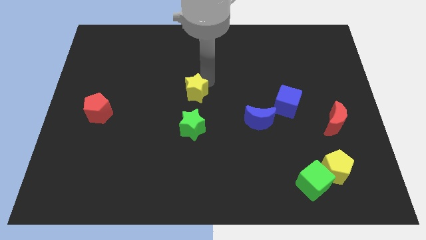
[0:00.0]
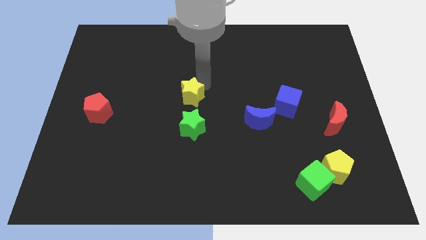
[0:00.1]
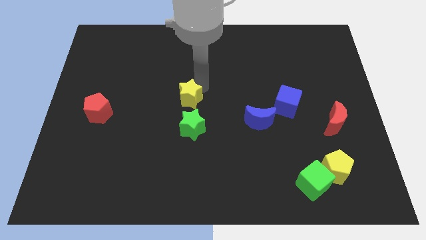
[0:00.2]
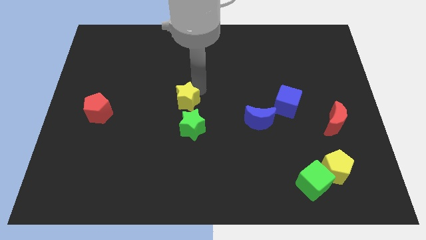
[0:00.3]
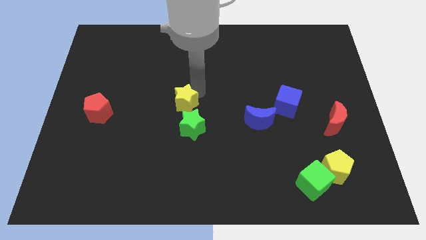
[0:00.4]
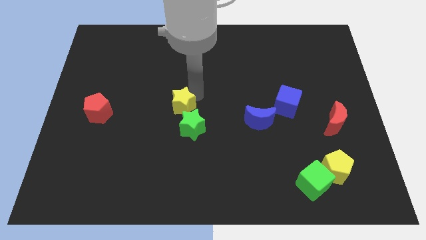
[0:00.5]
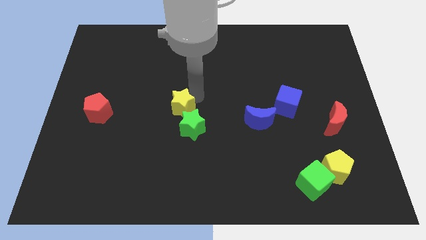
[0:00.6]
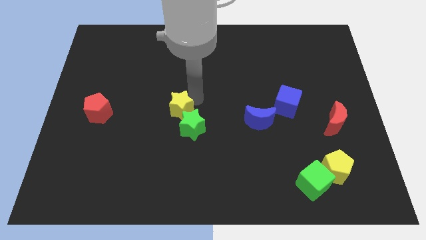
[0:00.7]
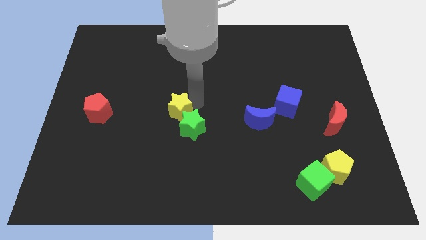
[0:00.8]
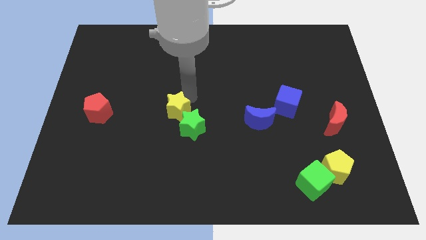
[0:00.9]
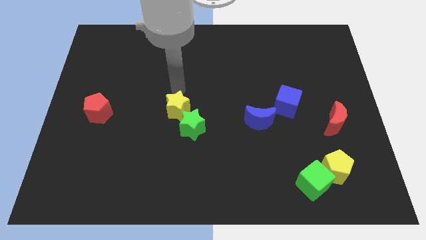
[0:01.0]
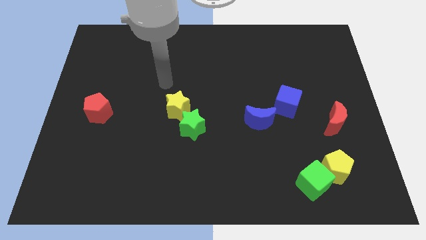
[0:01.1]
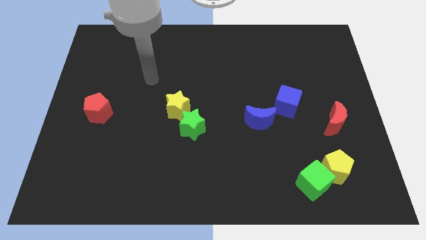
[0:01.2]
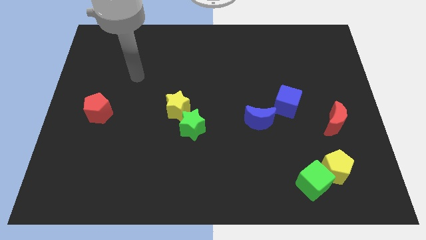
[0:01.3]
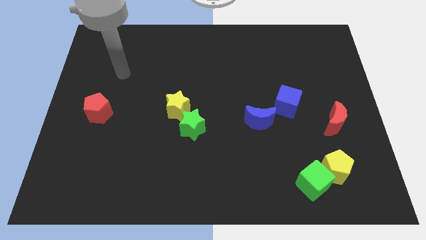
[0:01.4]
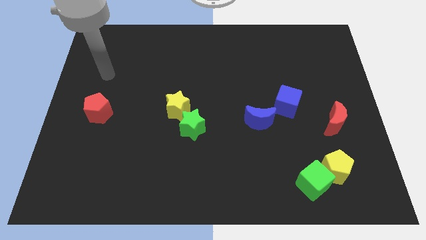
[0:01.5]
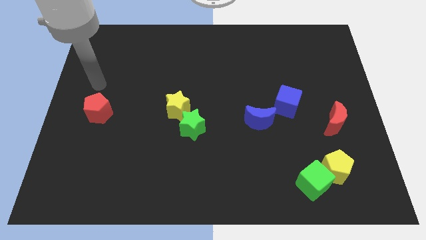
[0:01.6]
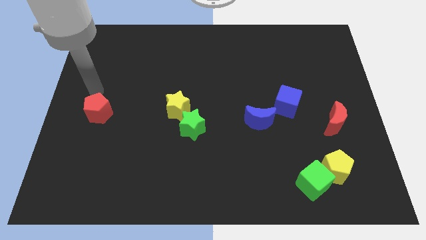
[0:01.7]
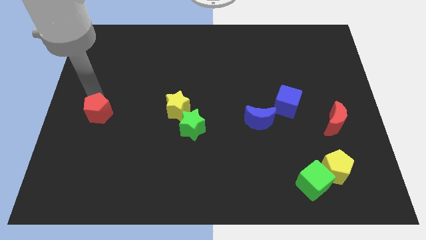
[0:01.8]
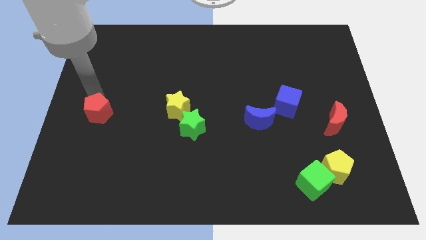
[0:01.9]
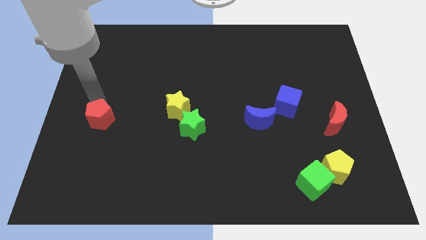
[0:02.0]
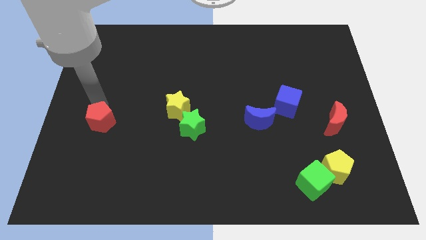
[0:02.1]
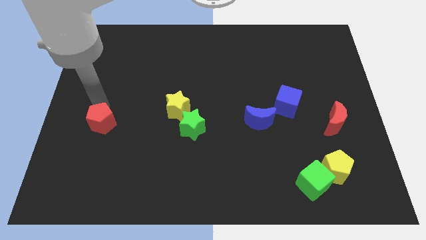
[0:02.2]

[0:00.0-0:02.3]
drag yellow star close to green star

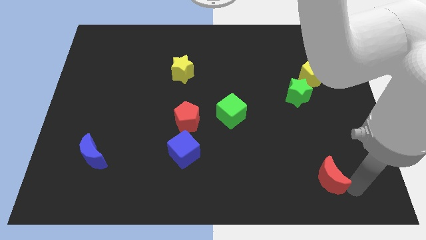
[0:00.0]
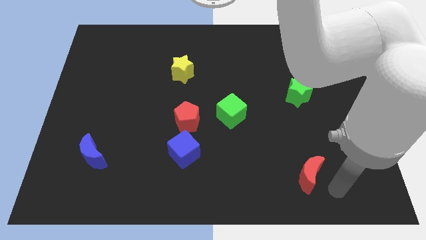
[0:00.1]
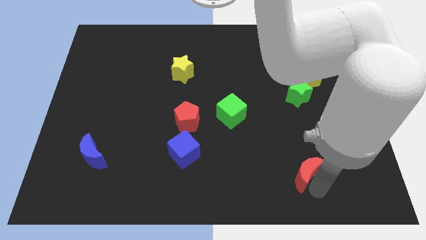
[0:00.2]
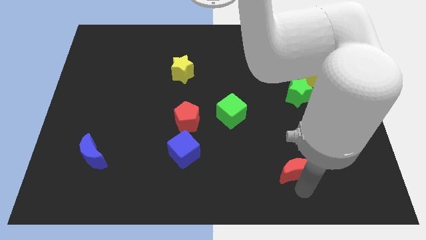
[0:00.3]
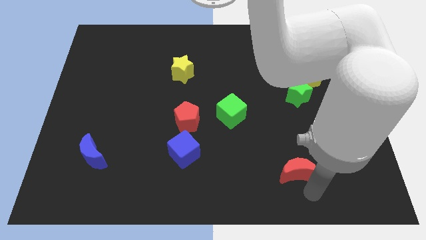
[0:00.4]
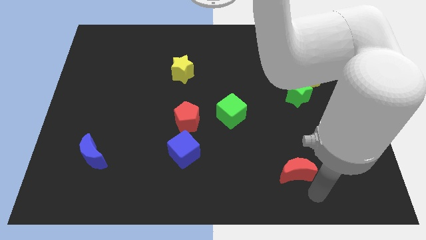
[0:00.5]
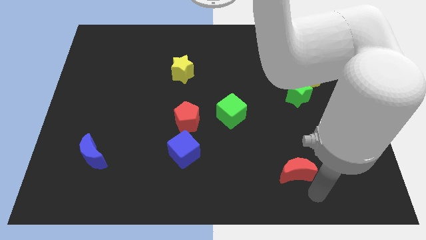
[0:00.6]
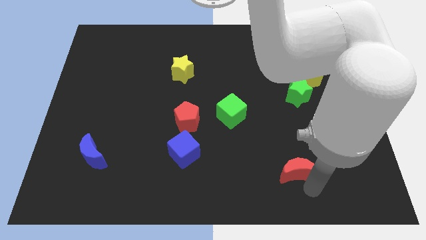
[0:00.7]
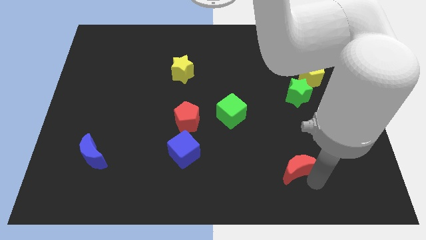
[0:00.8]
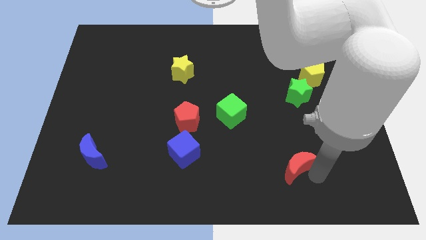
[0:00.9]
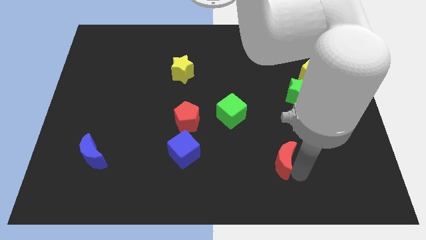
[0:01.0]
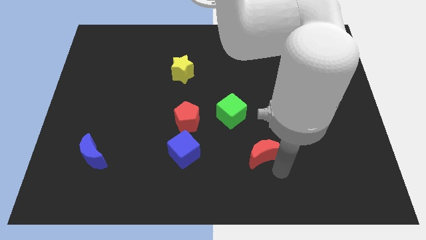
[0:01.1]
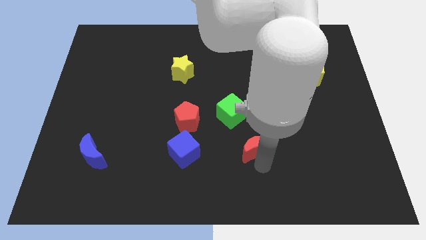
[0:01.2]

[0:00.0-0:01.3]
push red crescent diagonally upwards of the board

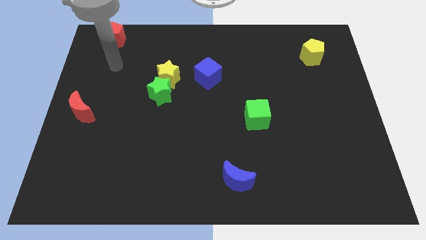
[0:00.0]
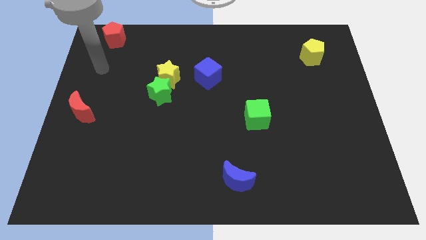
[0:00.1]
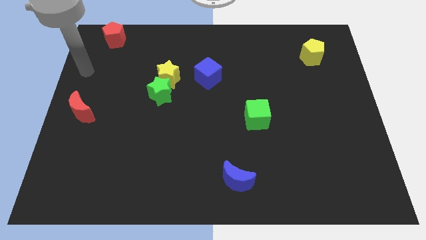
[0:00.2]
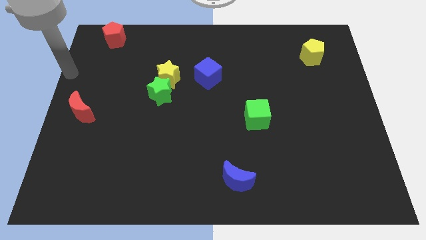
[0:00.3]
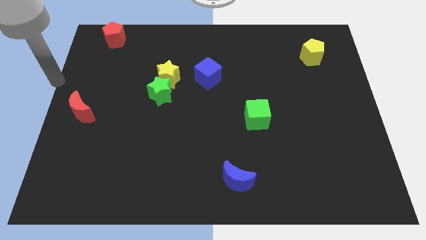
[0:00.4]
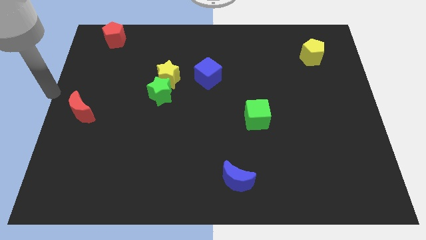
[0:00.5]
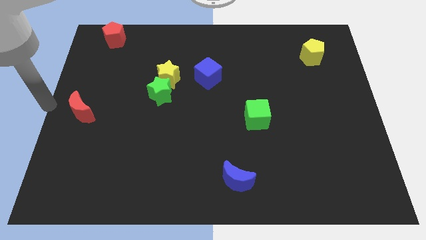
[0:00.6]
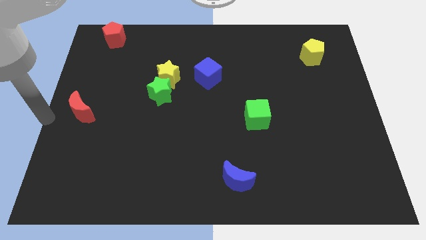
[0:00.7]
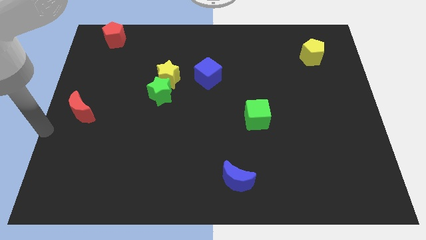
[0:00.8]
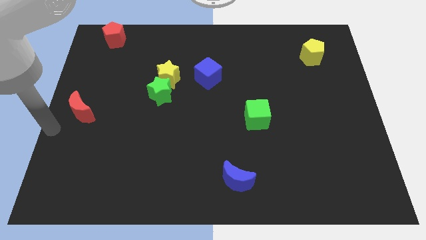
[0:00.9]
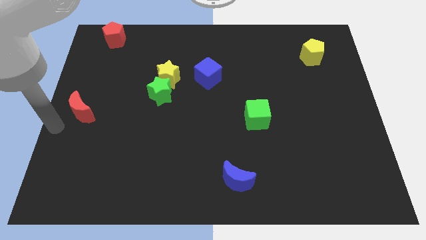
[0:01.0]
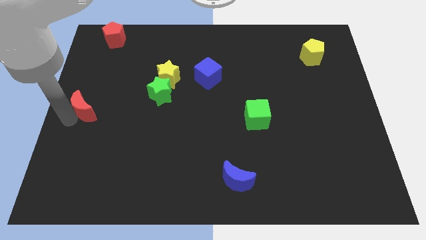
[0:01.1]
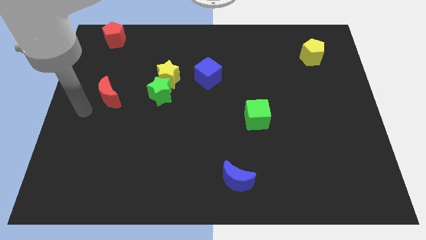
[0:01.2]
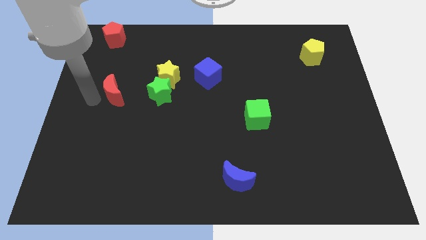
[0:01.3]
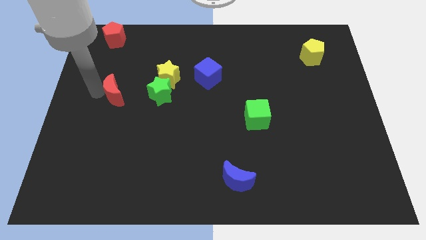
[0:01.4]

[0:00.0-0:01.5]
move the red crescent horizontally parallel to the green star

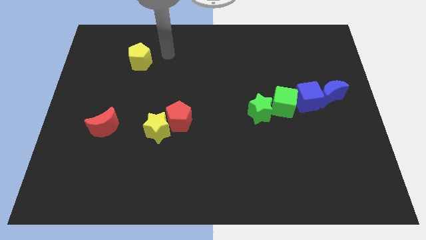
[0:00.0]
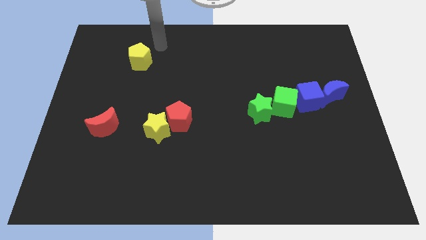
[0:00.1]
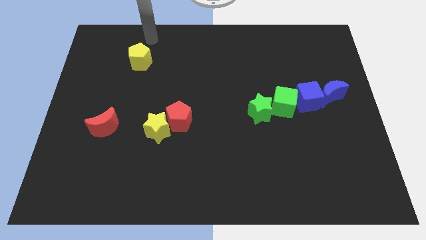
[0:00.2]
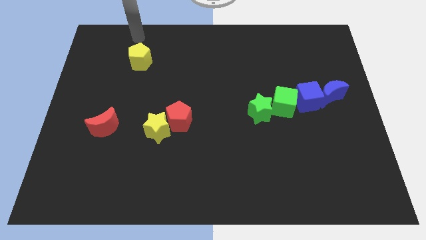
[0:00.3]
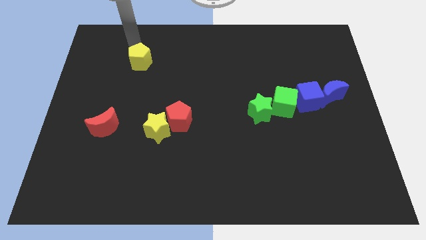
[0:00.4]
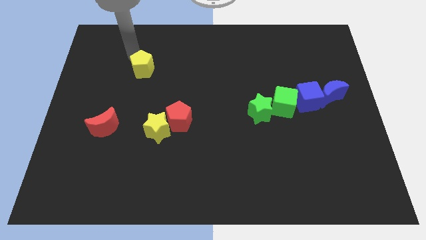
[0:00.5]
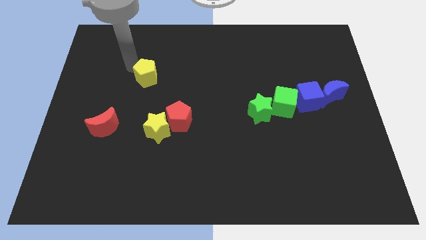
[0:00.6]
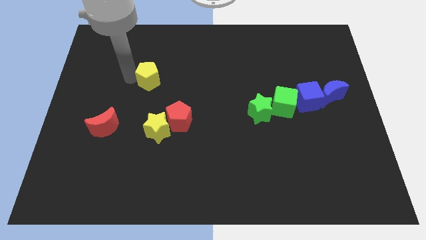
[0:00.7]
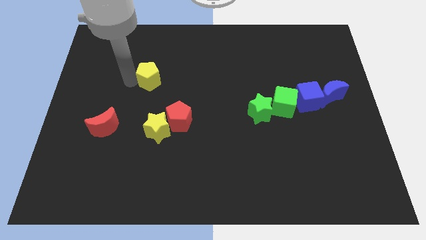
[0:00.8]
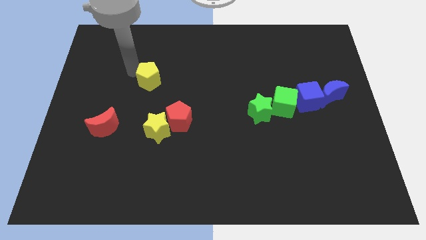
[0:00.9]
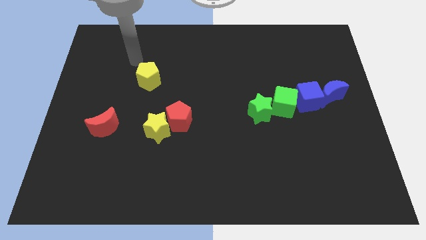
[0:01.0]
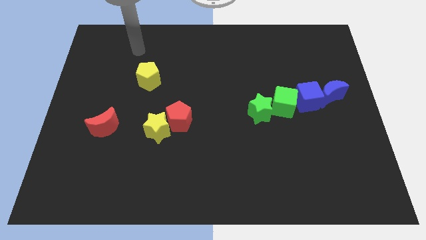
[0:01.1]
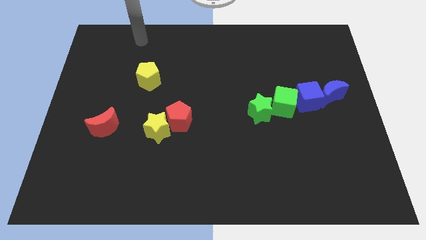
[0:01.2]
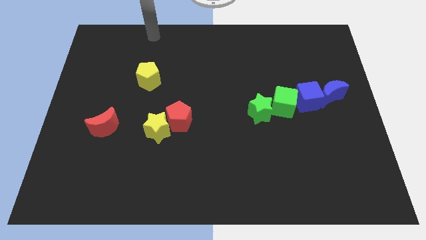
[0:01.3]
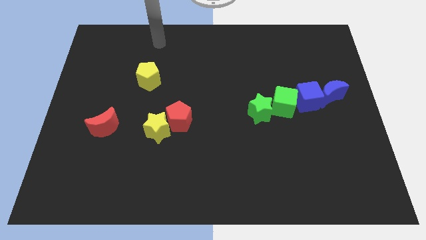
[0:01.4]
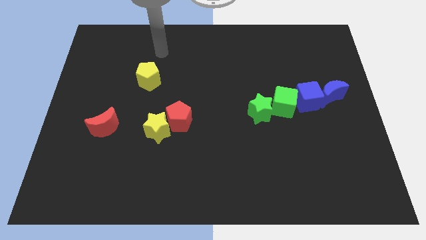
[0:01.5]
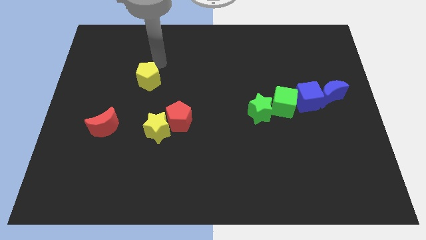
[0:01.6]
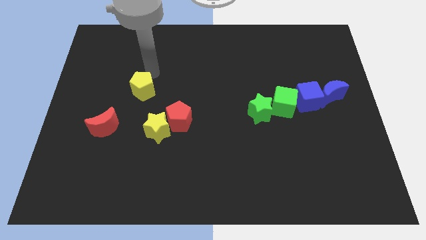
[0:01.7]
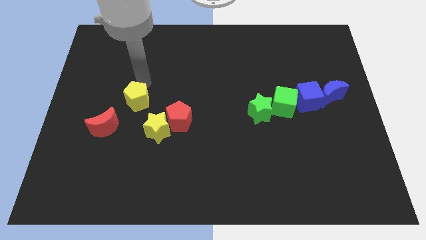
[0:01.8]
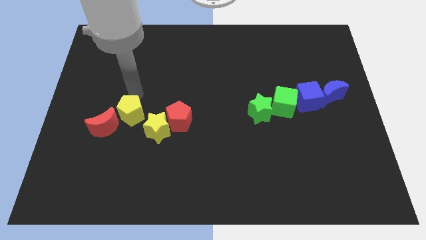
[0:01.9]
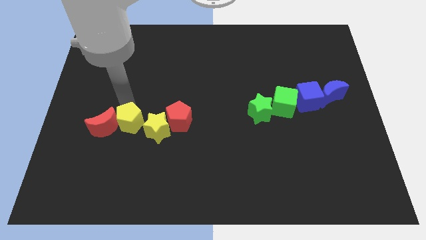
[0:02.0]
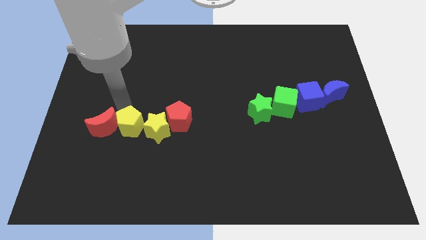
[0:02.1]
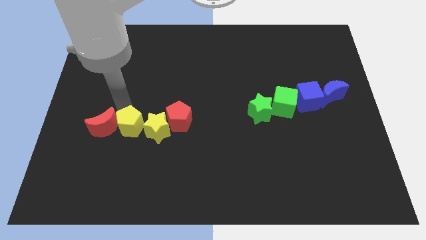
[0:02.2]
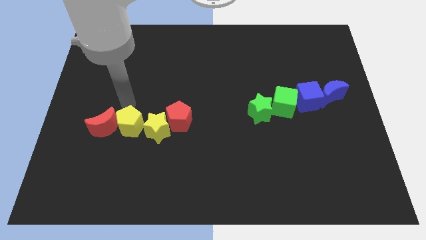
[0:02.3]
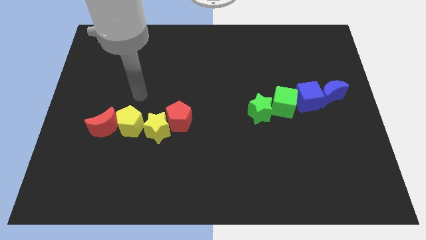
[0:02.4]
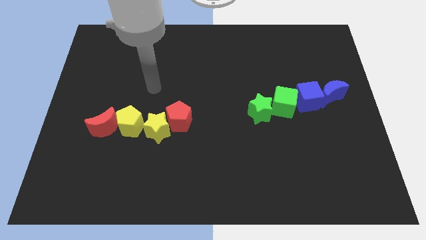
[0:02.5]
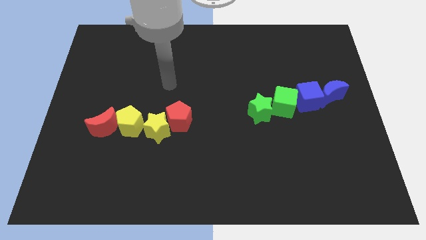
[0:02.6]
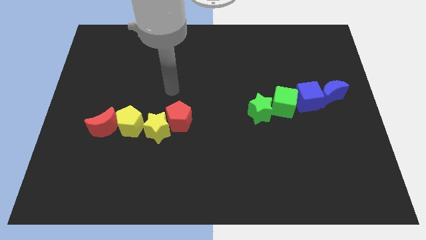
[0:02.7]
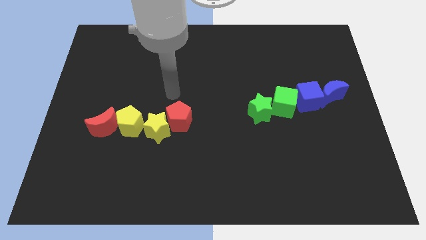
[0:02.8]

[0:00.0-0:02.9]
place the yellow pentagon in between the yellow star and the red moon

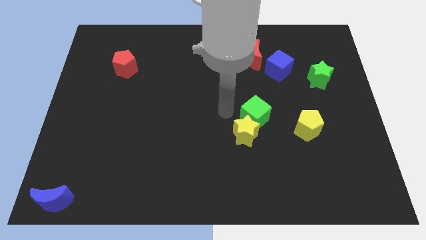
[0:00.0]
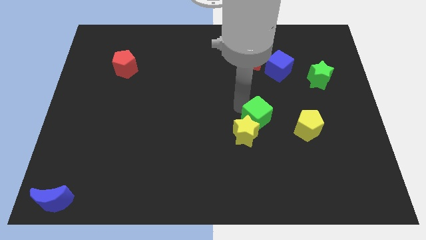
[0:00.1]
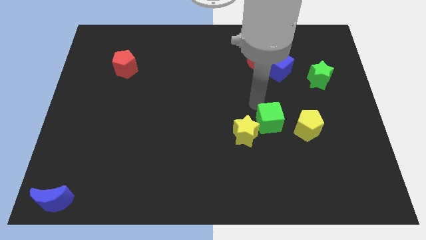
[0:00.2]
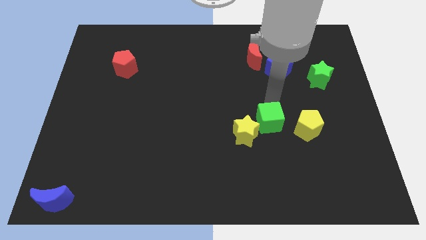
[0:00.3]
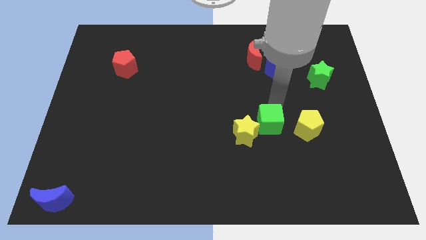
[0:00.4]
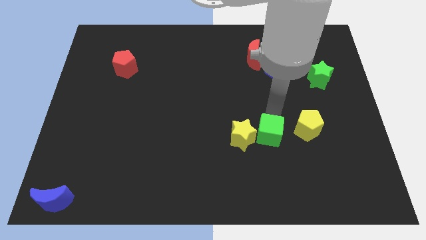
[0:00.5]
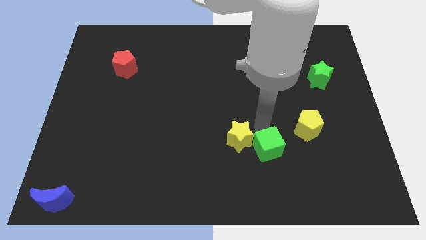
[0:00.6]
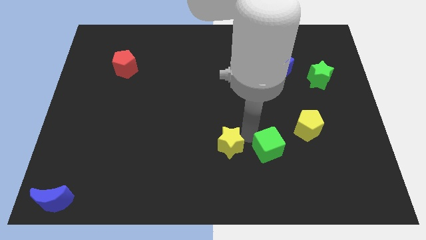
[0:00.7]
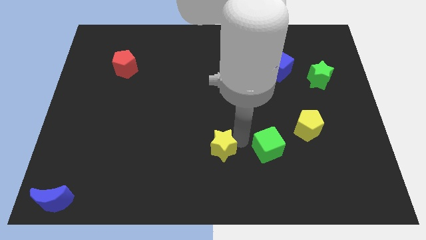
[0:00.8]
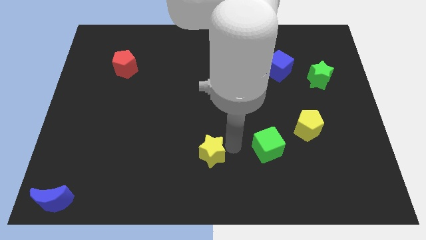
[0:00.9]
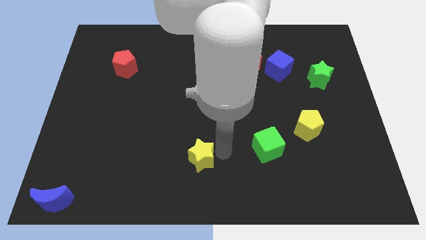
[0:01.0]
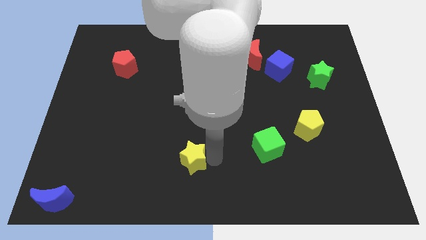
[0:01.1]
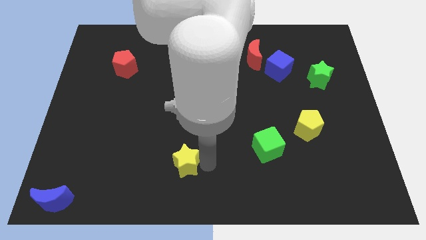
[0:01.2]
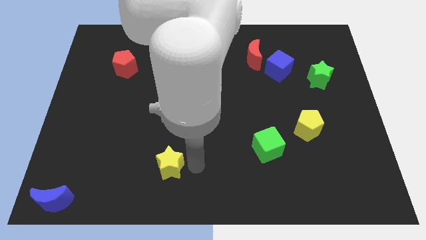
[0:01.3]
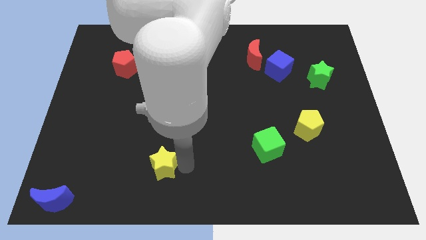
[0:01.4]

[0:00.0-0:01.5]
separate the yellow star and the green cube
